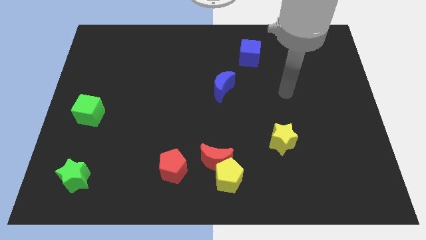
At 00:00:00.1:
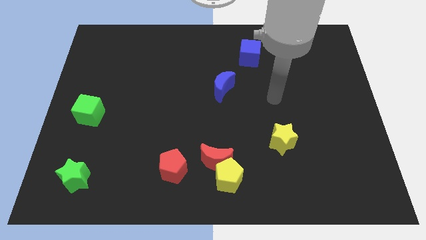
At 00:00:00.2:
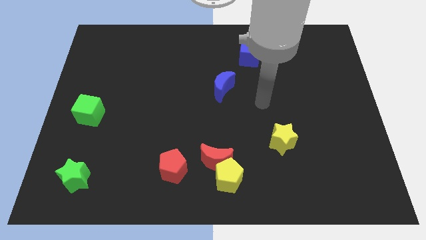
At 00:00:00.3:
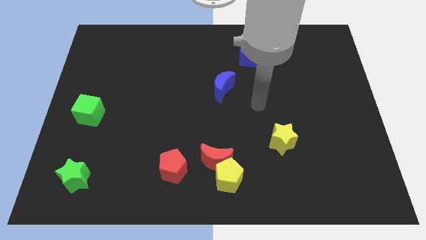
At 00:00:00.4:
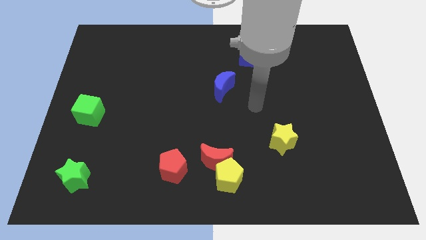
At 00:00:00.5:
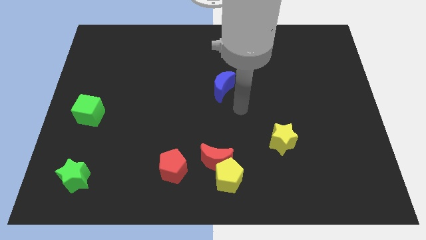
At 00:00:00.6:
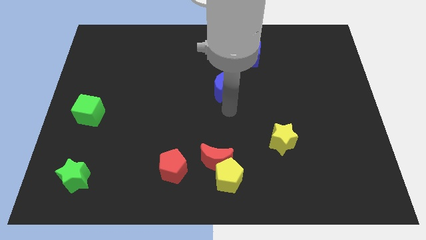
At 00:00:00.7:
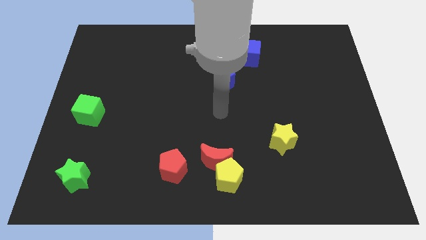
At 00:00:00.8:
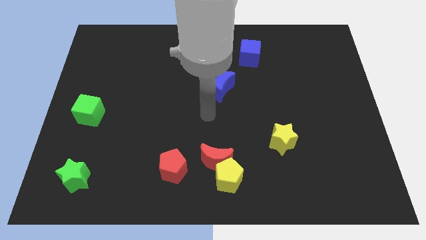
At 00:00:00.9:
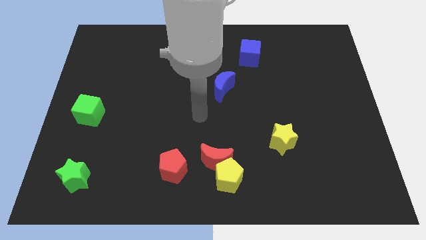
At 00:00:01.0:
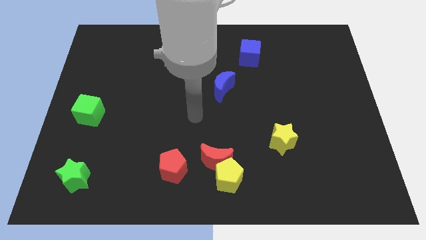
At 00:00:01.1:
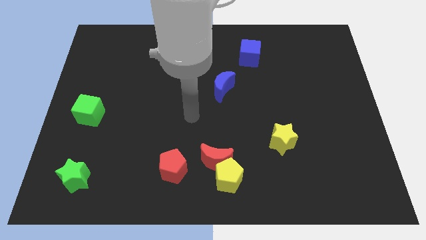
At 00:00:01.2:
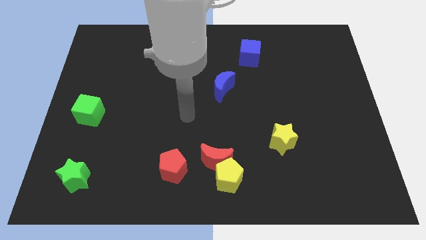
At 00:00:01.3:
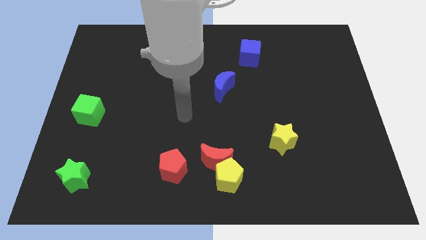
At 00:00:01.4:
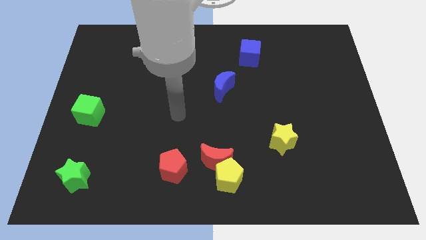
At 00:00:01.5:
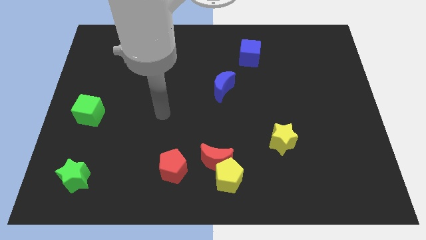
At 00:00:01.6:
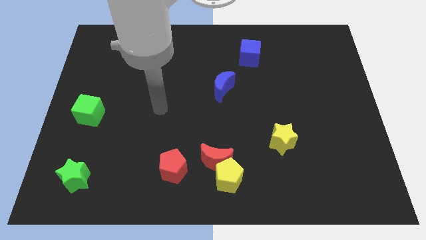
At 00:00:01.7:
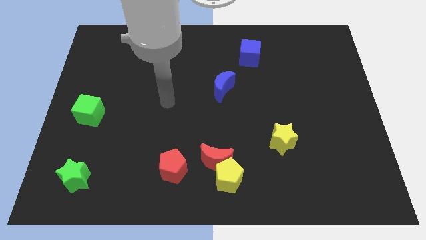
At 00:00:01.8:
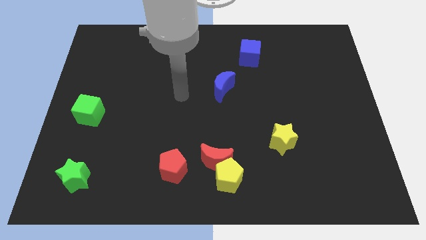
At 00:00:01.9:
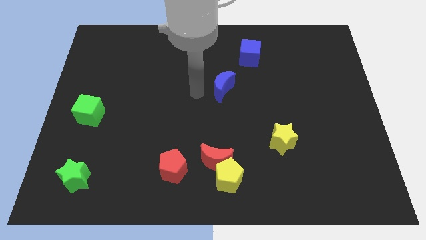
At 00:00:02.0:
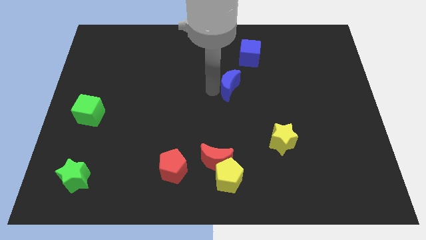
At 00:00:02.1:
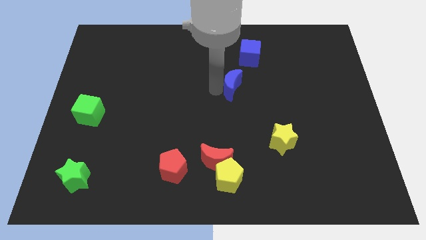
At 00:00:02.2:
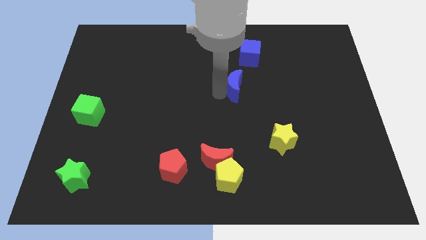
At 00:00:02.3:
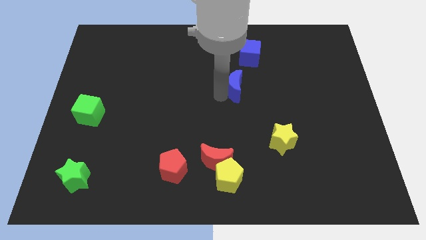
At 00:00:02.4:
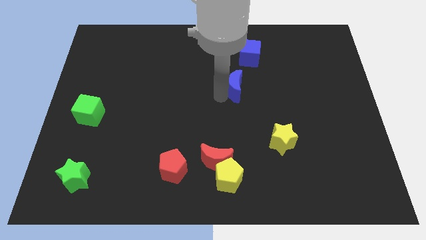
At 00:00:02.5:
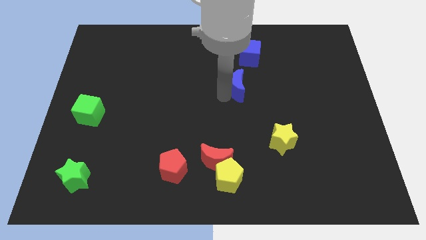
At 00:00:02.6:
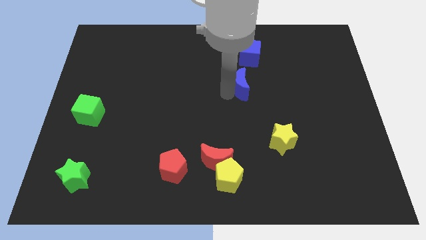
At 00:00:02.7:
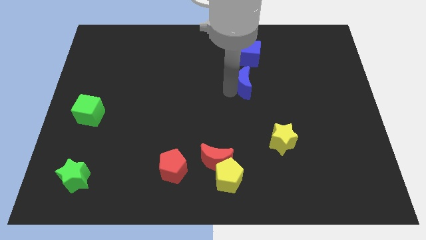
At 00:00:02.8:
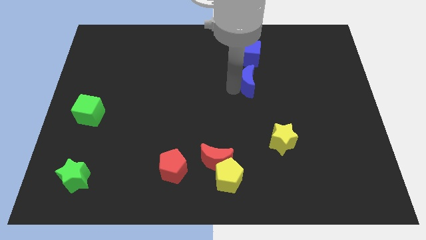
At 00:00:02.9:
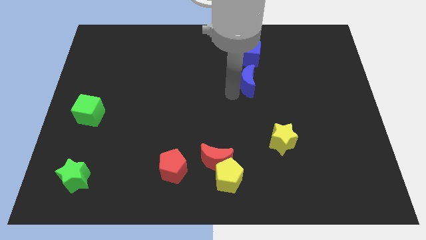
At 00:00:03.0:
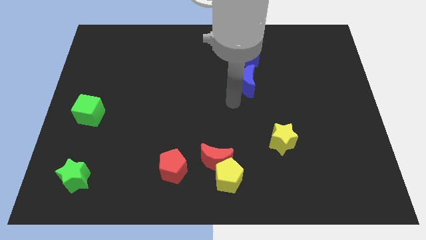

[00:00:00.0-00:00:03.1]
slide the blue crescen towards the bottom side of the blue cube

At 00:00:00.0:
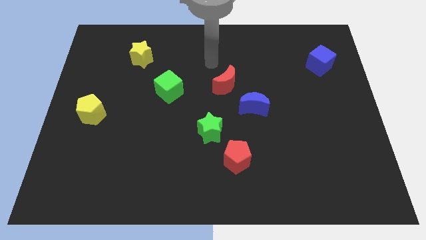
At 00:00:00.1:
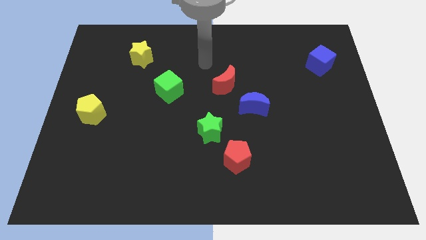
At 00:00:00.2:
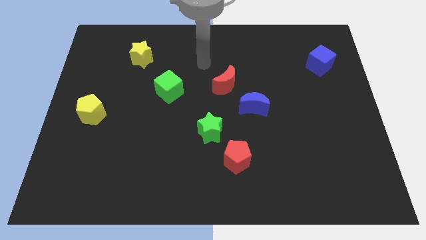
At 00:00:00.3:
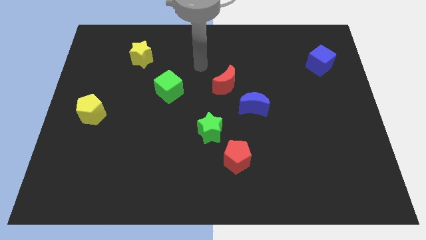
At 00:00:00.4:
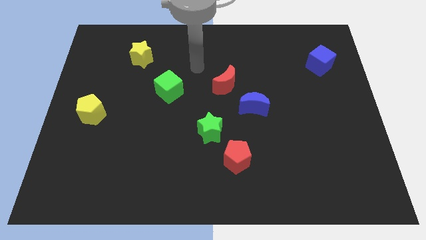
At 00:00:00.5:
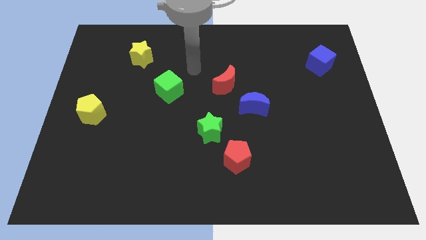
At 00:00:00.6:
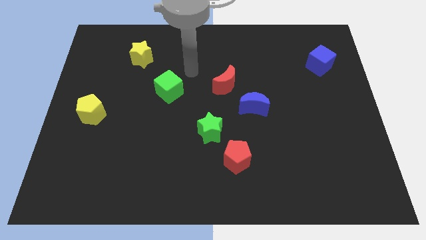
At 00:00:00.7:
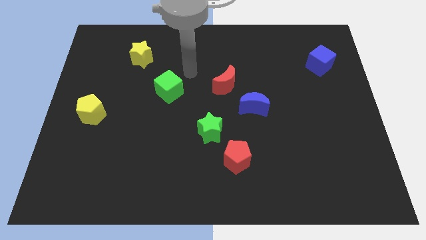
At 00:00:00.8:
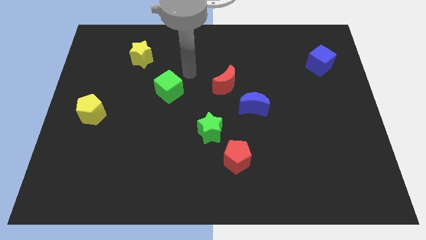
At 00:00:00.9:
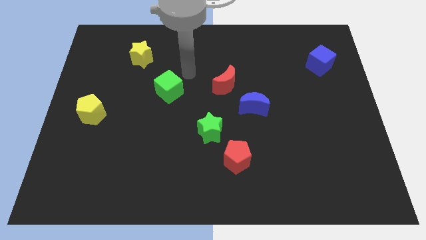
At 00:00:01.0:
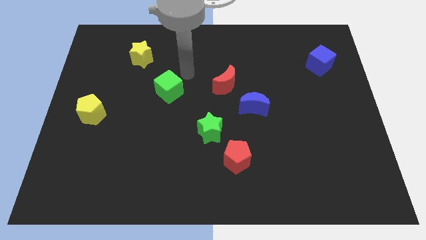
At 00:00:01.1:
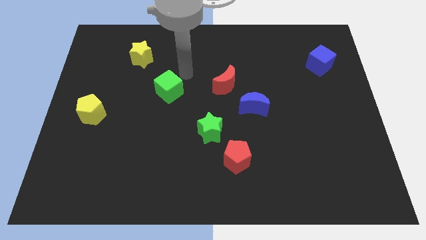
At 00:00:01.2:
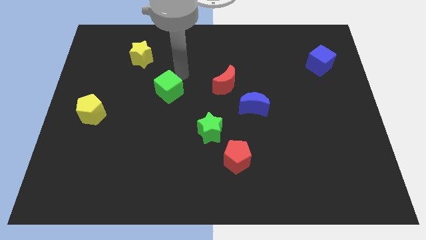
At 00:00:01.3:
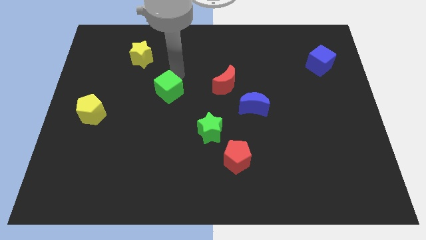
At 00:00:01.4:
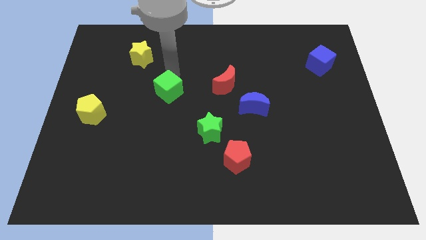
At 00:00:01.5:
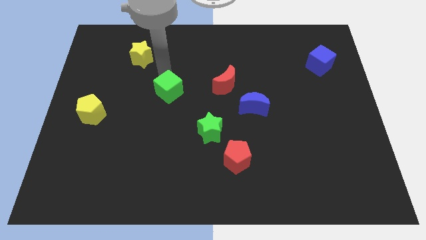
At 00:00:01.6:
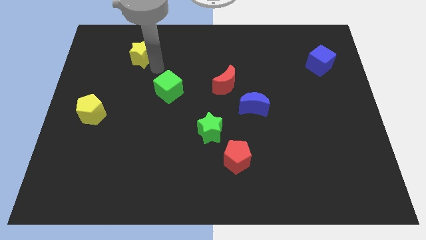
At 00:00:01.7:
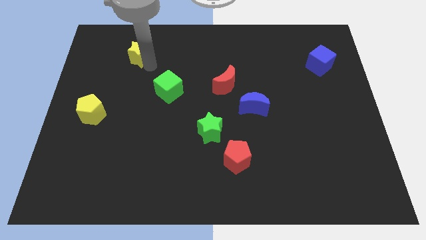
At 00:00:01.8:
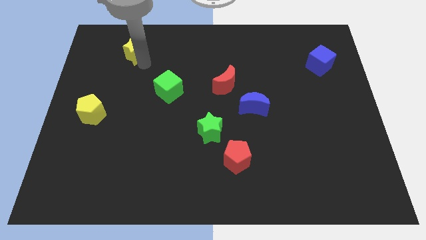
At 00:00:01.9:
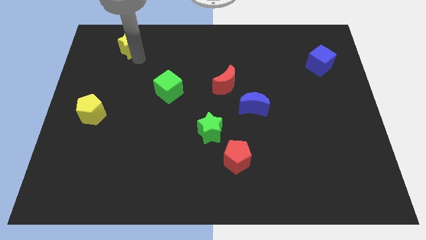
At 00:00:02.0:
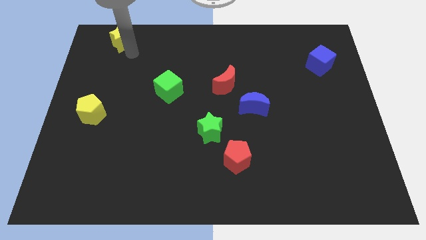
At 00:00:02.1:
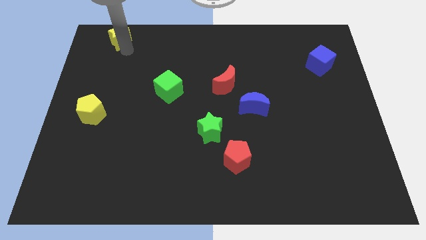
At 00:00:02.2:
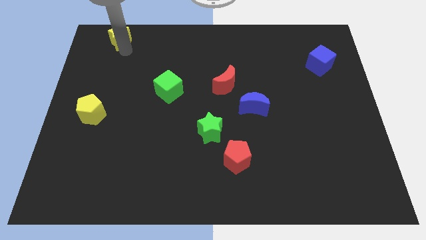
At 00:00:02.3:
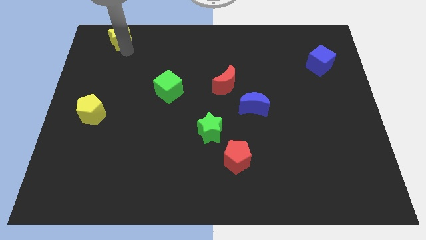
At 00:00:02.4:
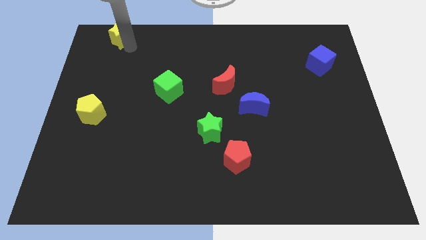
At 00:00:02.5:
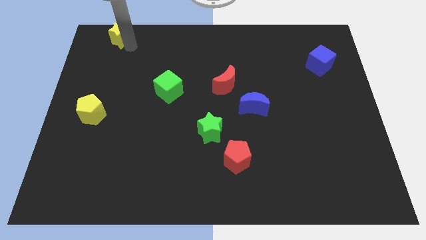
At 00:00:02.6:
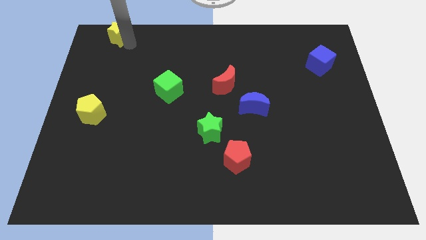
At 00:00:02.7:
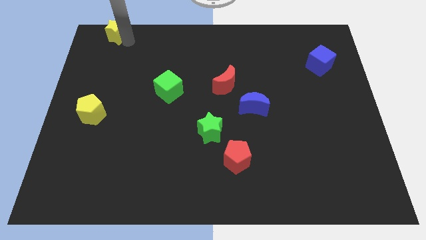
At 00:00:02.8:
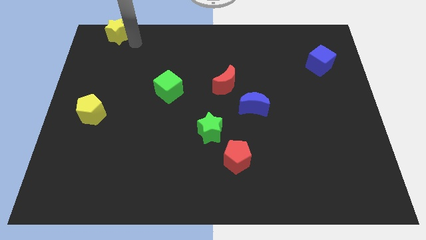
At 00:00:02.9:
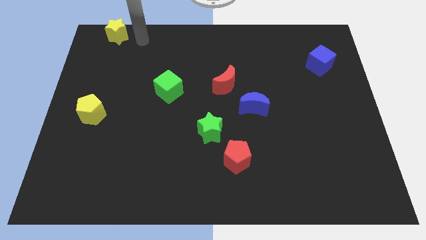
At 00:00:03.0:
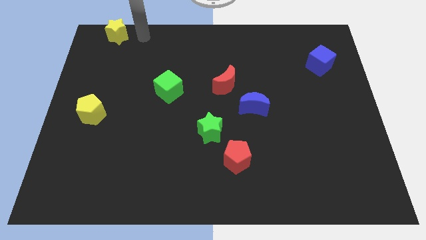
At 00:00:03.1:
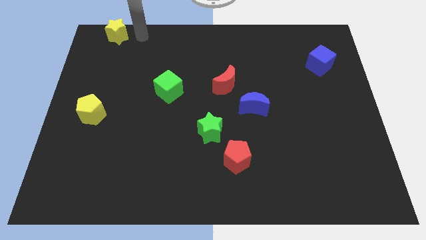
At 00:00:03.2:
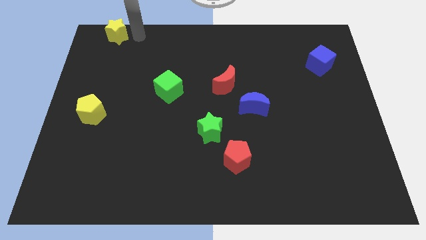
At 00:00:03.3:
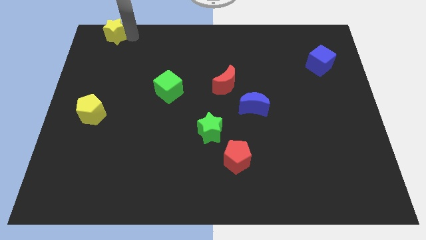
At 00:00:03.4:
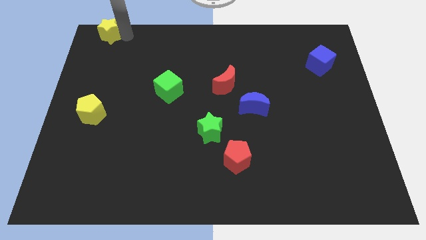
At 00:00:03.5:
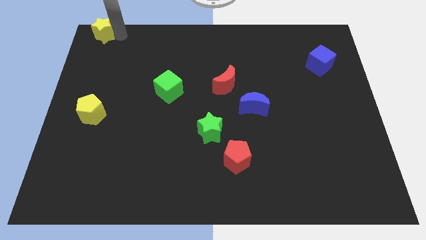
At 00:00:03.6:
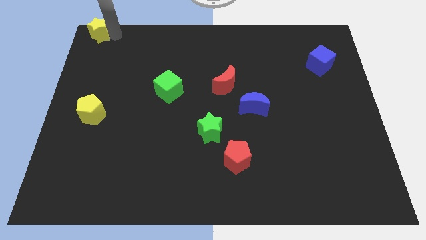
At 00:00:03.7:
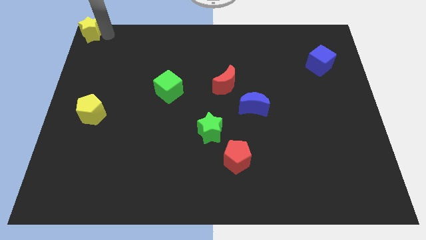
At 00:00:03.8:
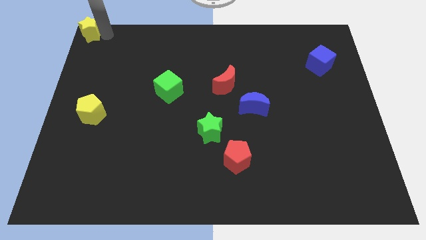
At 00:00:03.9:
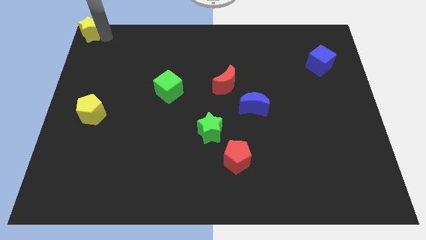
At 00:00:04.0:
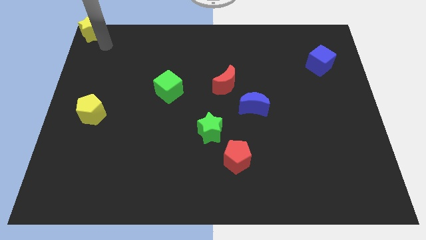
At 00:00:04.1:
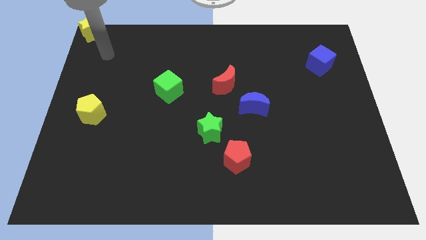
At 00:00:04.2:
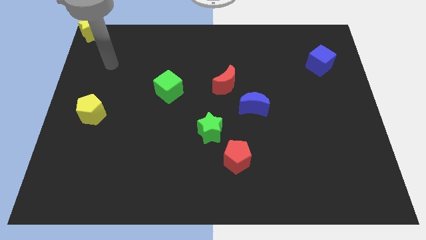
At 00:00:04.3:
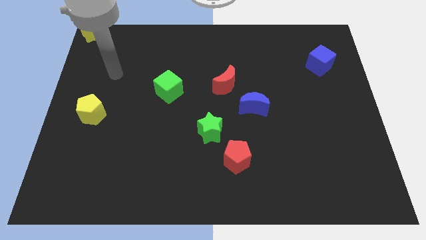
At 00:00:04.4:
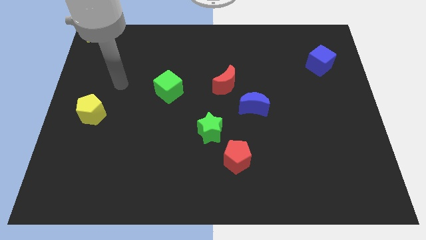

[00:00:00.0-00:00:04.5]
slide the yellow star to the top left corner of the board

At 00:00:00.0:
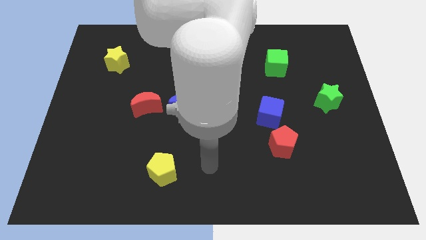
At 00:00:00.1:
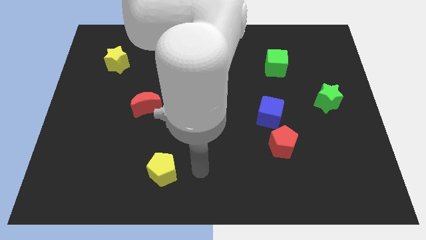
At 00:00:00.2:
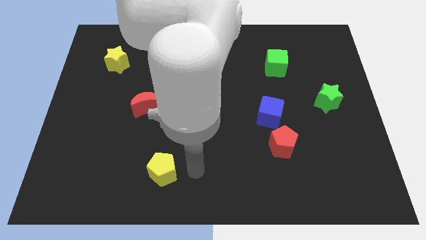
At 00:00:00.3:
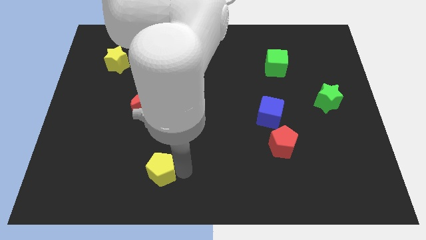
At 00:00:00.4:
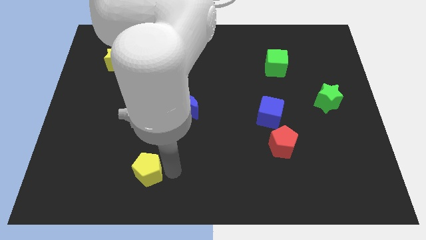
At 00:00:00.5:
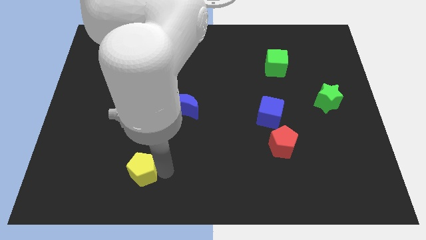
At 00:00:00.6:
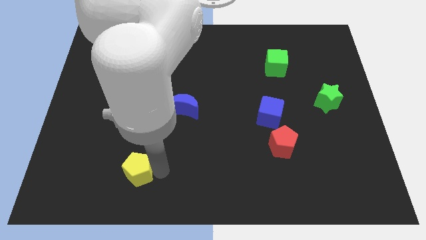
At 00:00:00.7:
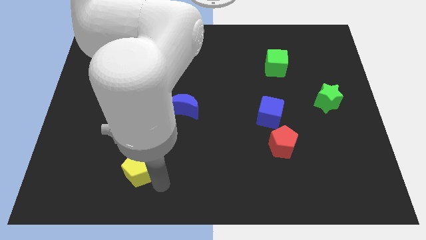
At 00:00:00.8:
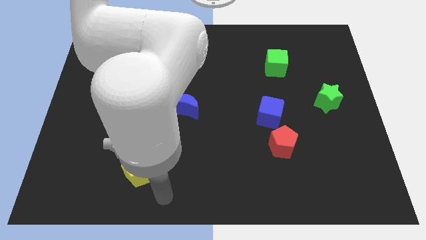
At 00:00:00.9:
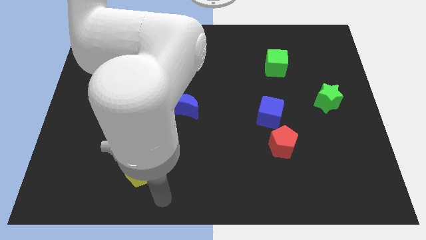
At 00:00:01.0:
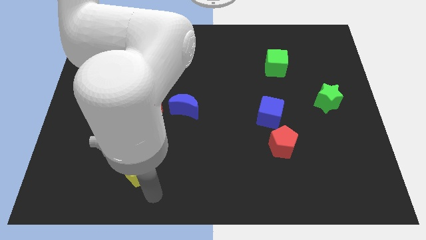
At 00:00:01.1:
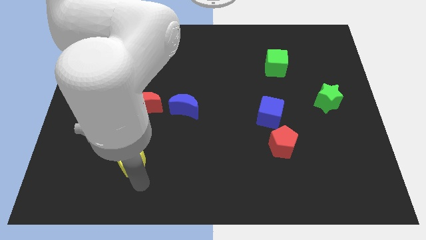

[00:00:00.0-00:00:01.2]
move the yellow pentagon to the left side of the board
